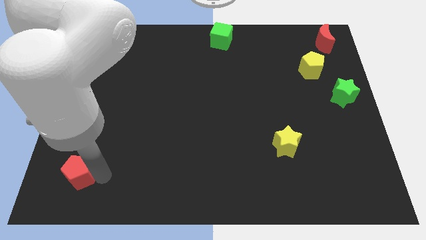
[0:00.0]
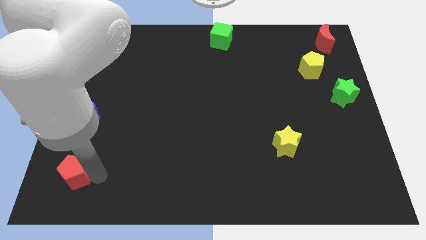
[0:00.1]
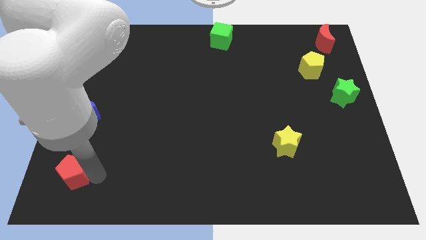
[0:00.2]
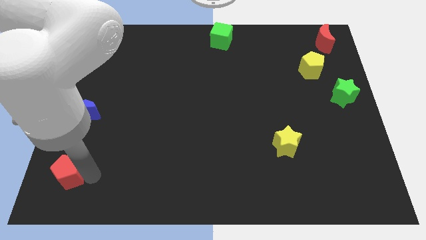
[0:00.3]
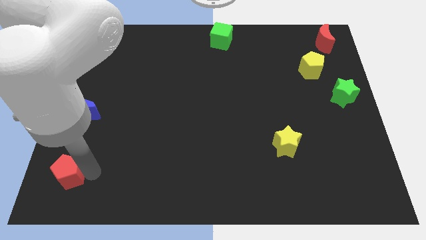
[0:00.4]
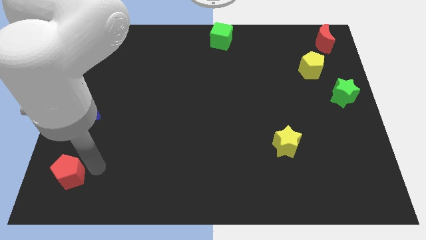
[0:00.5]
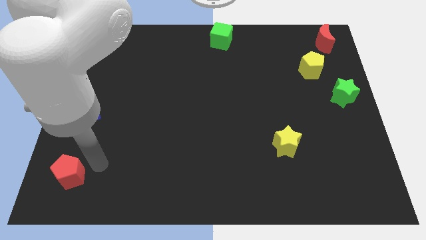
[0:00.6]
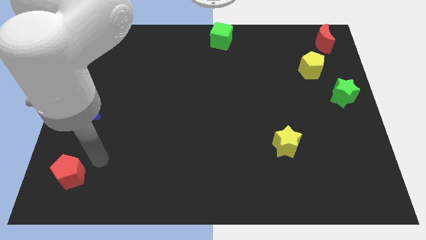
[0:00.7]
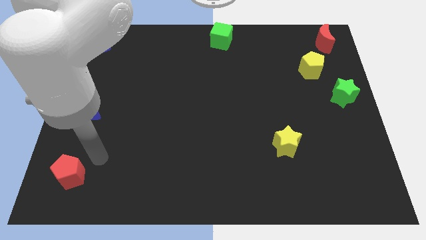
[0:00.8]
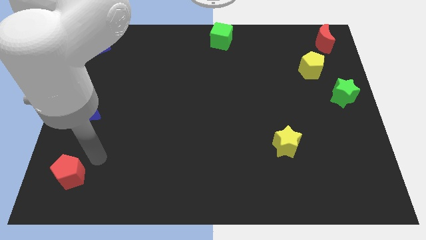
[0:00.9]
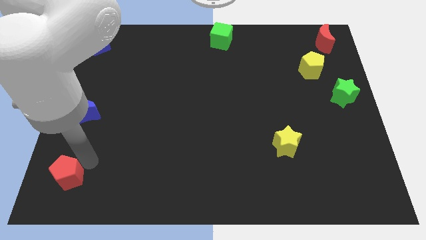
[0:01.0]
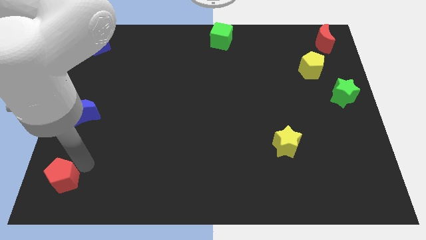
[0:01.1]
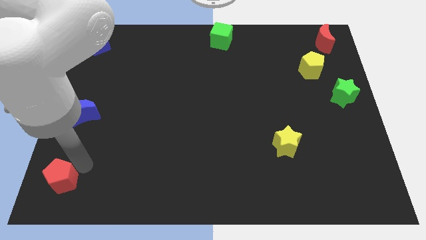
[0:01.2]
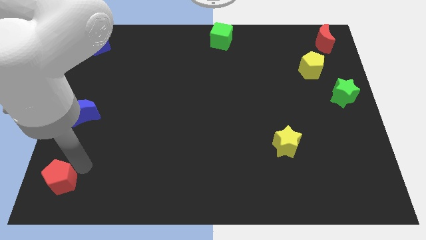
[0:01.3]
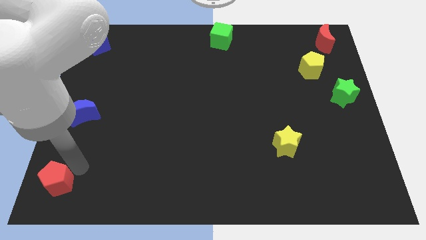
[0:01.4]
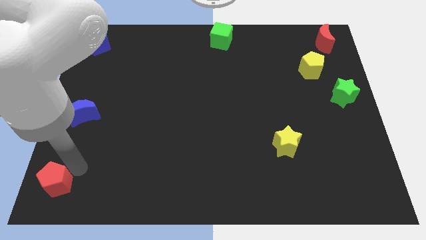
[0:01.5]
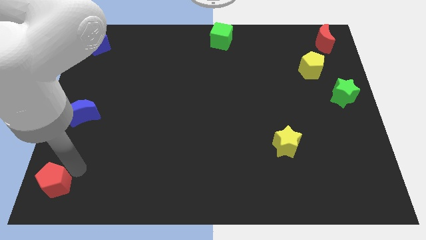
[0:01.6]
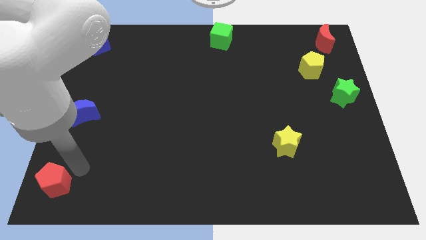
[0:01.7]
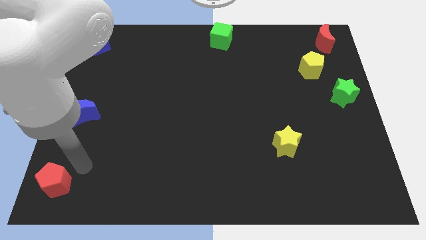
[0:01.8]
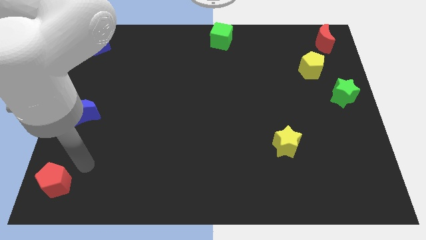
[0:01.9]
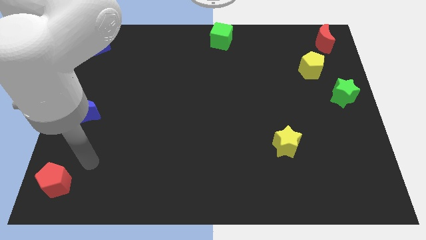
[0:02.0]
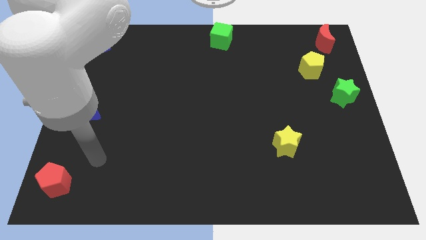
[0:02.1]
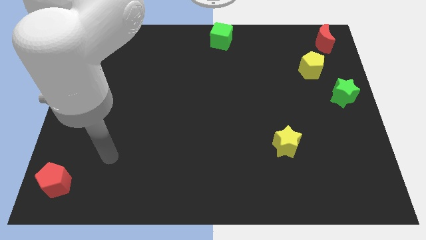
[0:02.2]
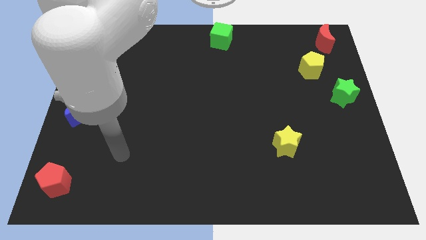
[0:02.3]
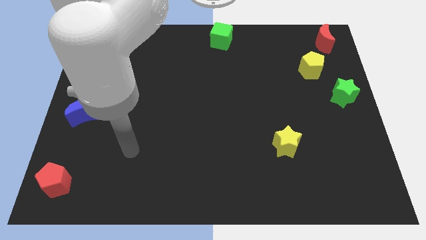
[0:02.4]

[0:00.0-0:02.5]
place the red pentagon at the bottom left corner of the board

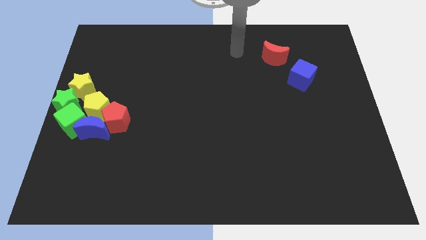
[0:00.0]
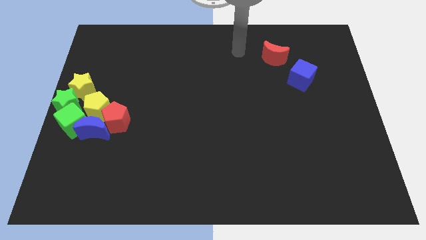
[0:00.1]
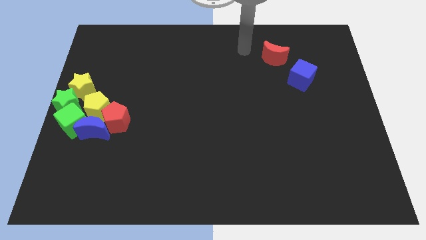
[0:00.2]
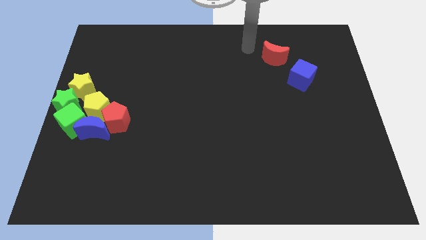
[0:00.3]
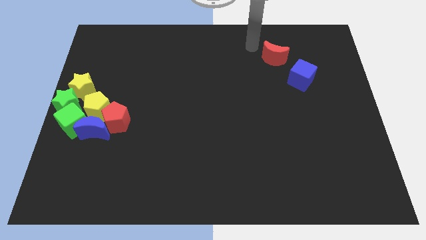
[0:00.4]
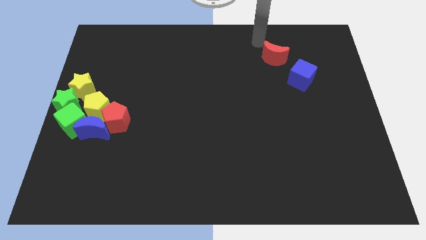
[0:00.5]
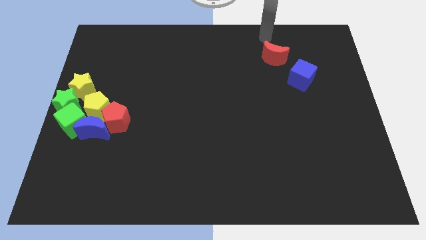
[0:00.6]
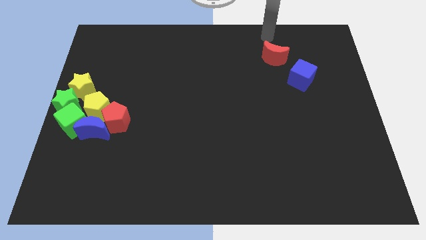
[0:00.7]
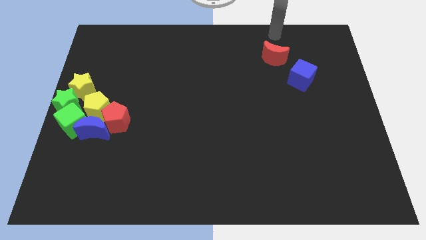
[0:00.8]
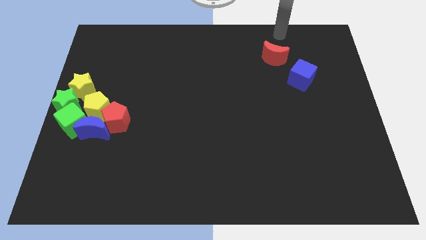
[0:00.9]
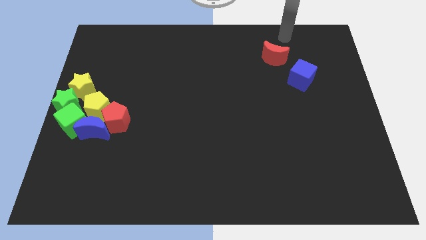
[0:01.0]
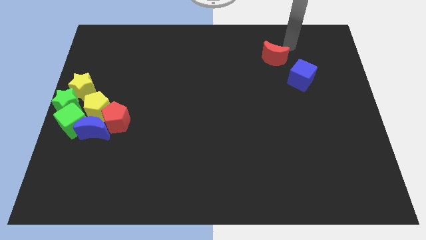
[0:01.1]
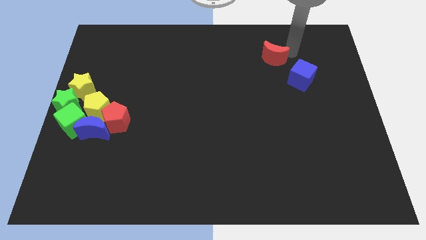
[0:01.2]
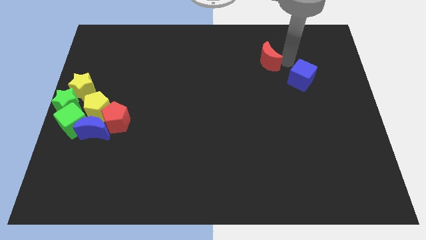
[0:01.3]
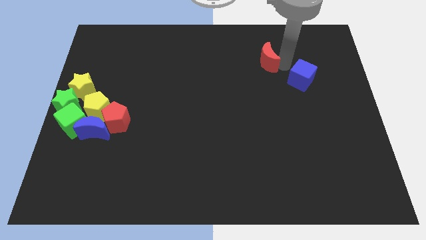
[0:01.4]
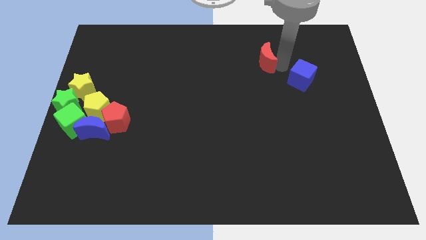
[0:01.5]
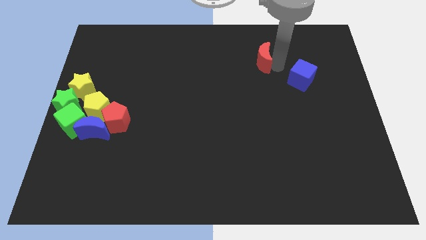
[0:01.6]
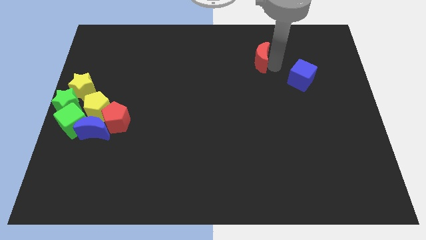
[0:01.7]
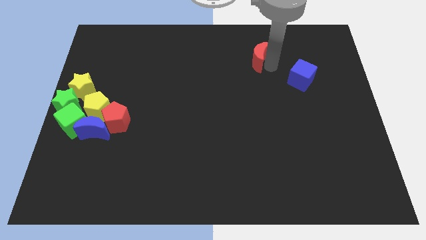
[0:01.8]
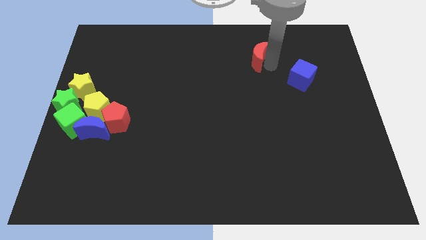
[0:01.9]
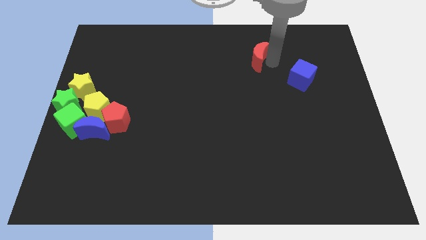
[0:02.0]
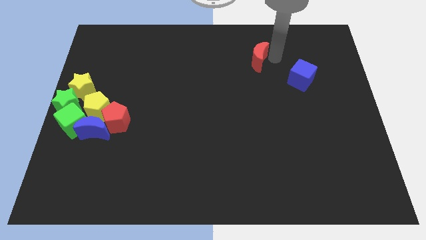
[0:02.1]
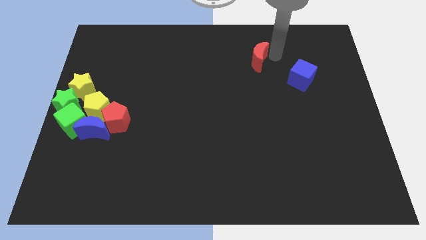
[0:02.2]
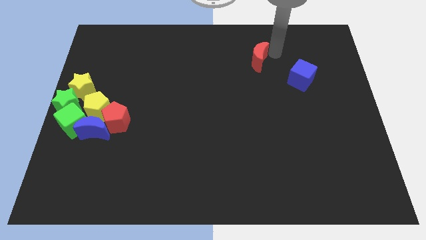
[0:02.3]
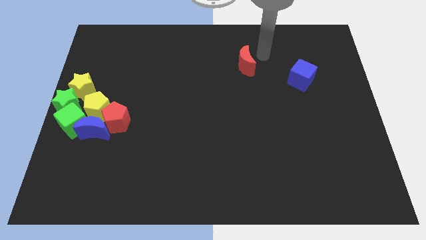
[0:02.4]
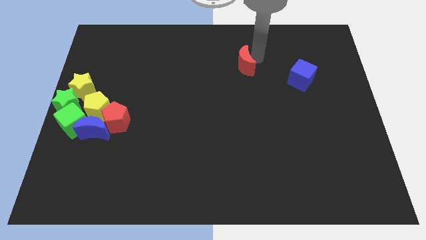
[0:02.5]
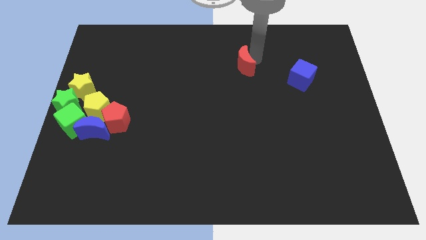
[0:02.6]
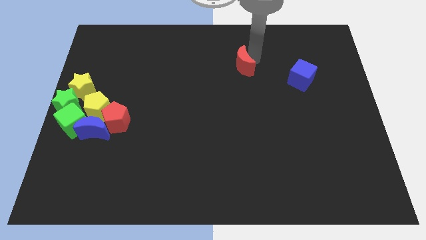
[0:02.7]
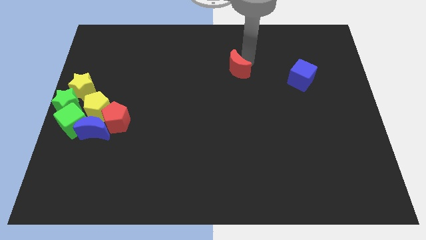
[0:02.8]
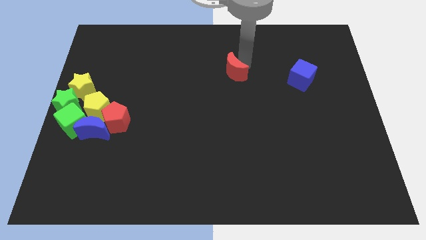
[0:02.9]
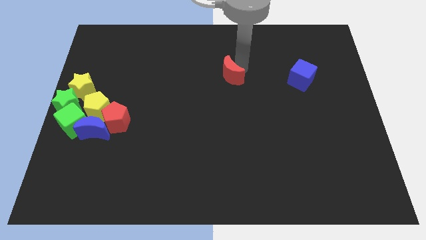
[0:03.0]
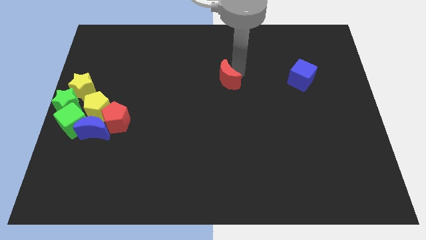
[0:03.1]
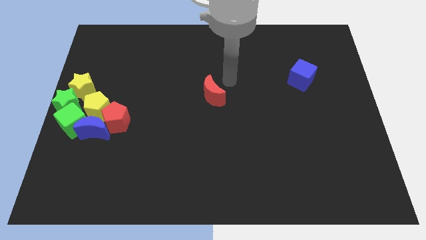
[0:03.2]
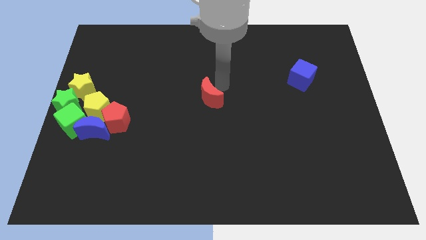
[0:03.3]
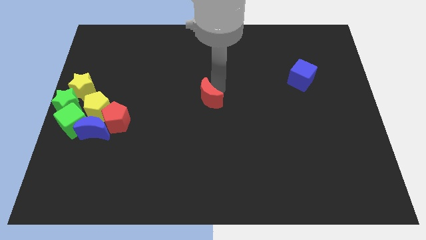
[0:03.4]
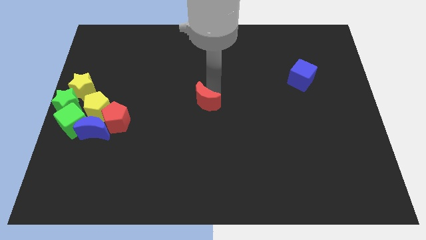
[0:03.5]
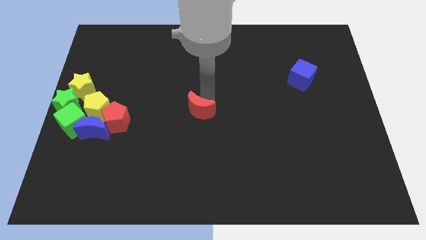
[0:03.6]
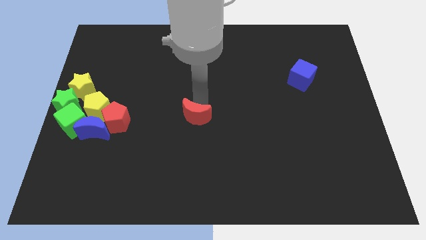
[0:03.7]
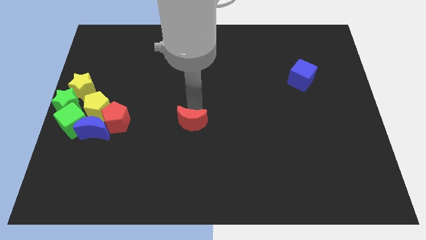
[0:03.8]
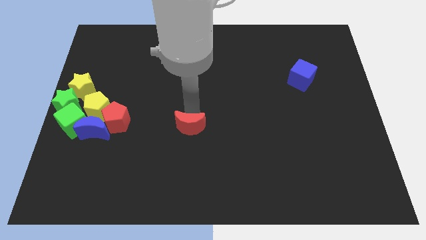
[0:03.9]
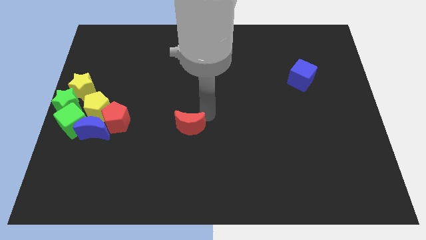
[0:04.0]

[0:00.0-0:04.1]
place the red moon to the center of the board

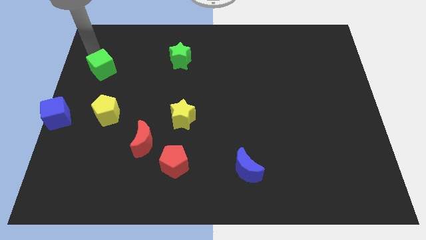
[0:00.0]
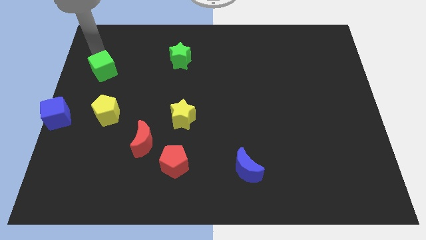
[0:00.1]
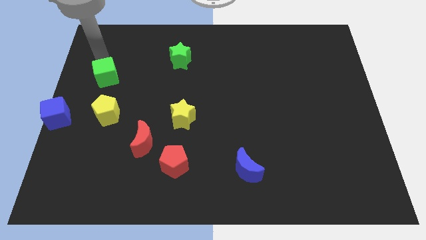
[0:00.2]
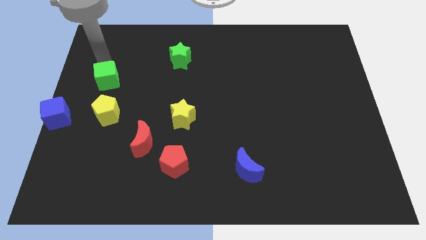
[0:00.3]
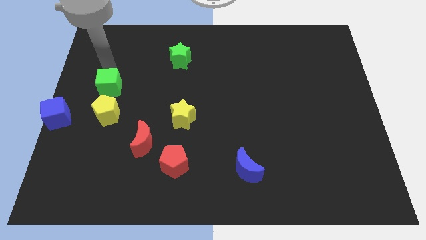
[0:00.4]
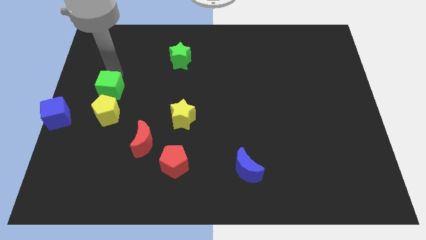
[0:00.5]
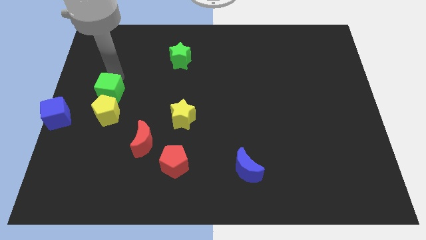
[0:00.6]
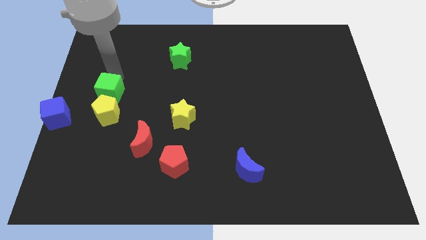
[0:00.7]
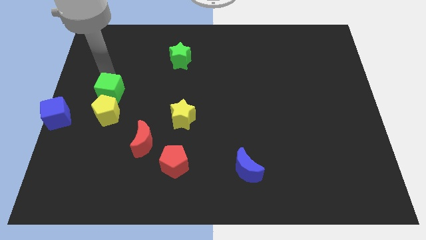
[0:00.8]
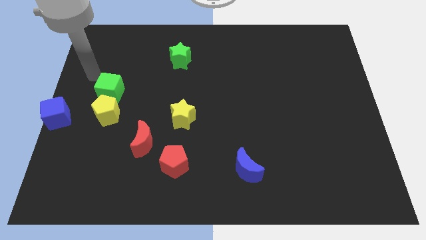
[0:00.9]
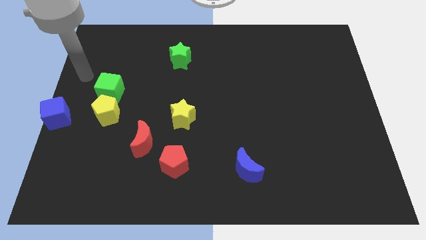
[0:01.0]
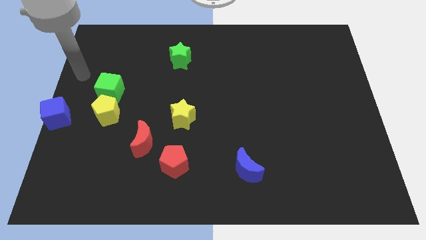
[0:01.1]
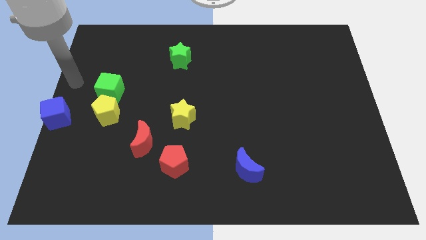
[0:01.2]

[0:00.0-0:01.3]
place green cube at the top of yellow pentagon

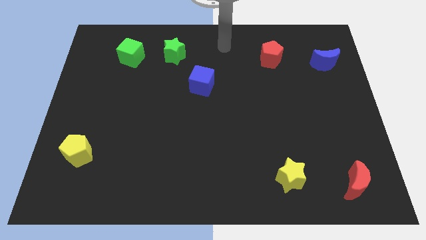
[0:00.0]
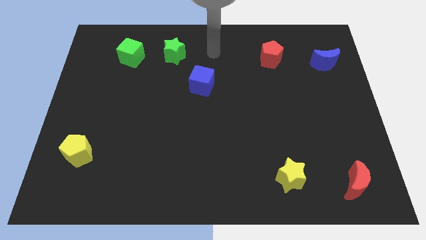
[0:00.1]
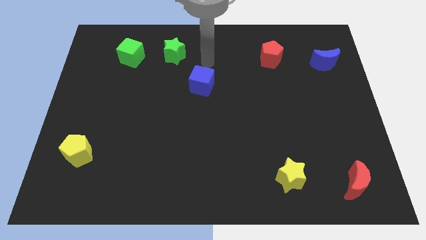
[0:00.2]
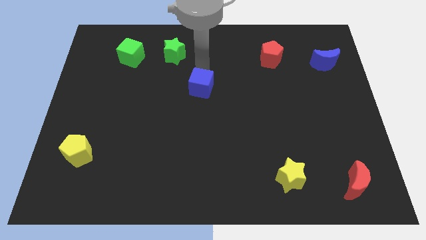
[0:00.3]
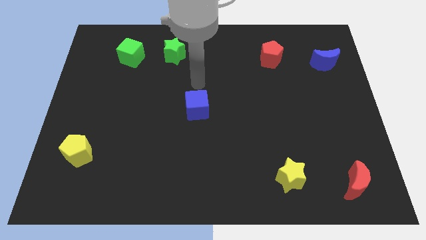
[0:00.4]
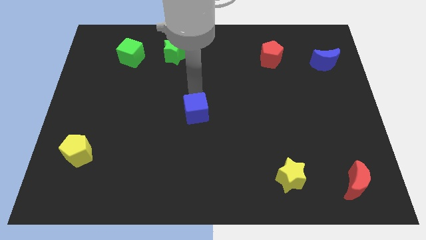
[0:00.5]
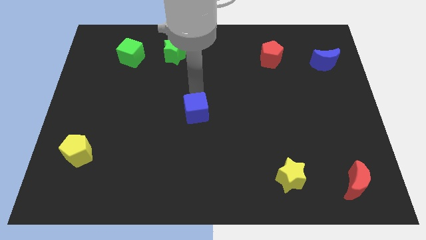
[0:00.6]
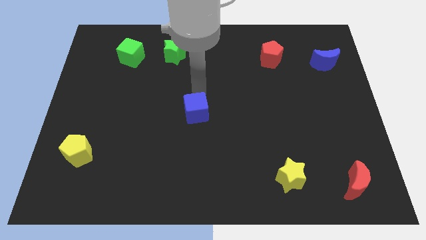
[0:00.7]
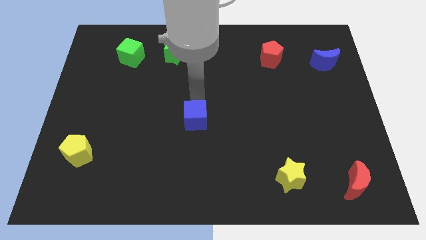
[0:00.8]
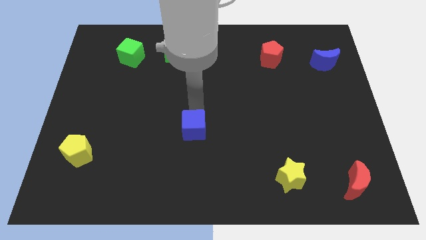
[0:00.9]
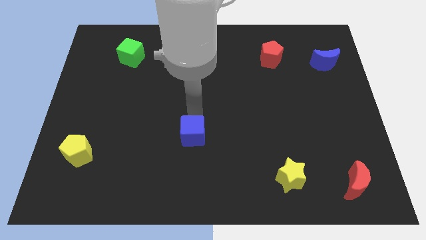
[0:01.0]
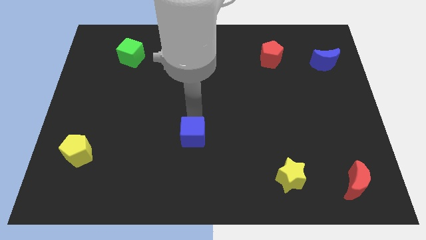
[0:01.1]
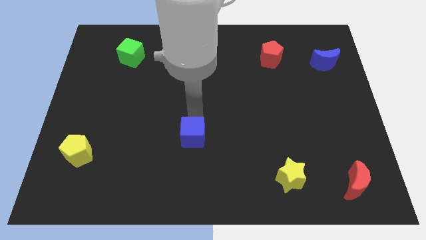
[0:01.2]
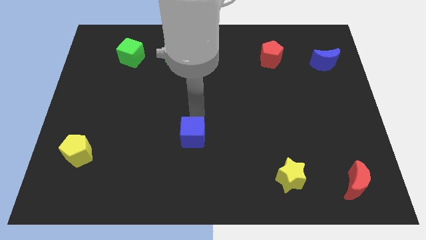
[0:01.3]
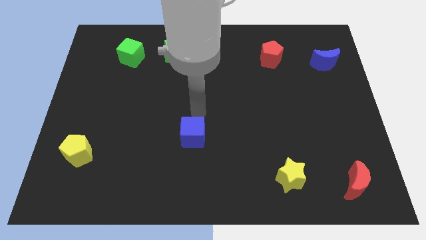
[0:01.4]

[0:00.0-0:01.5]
move the blue cube towards the center of the board
